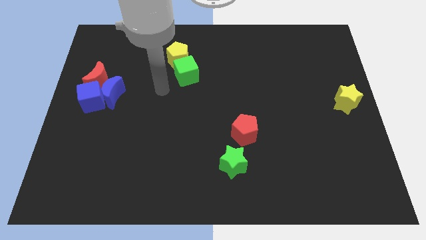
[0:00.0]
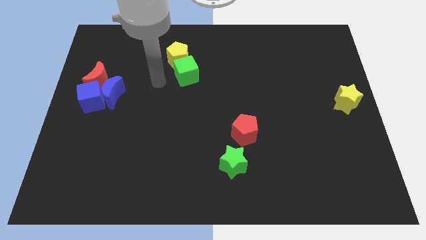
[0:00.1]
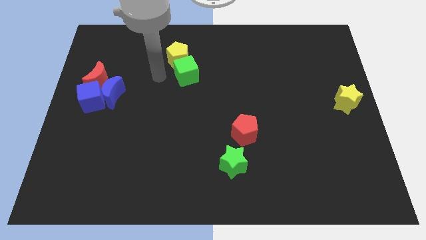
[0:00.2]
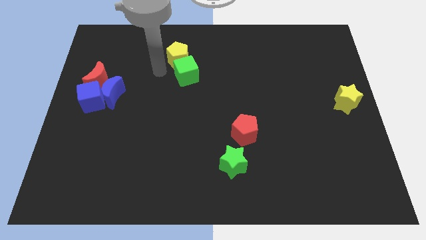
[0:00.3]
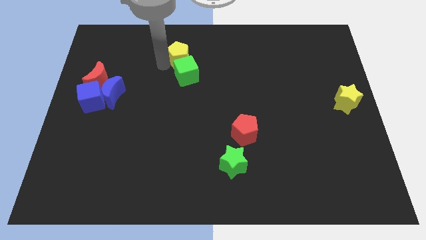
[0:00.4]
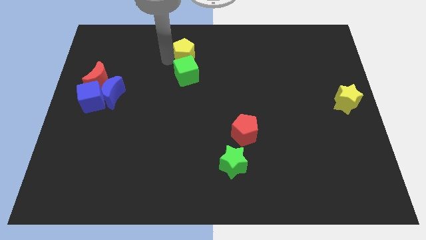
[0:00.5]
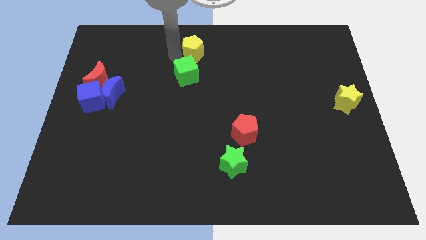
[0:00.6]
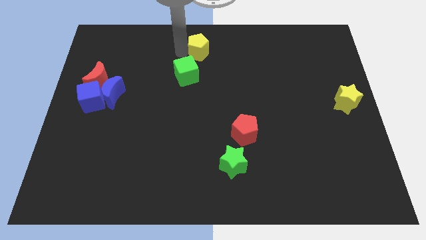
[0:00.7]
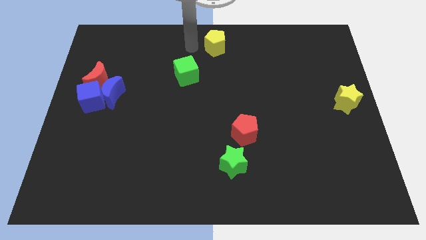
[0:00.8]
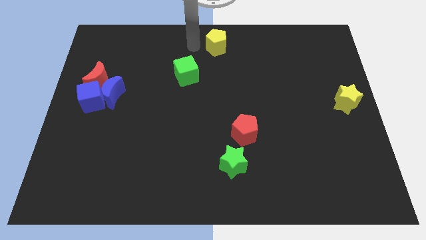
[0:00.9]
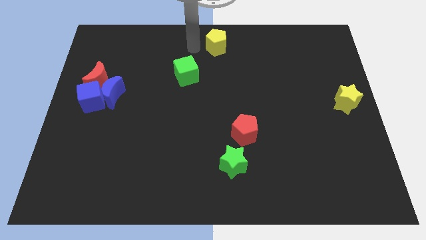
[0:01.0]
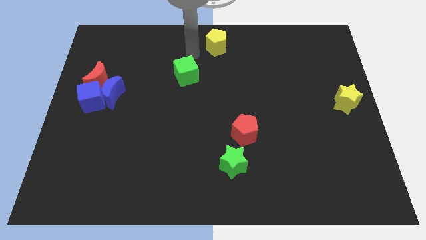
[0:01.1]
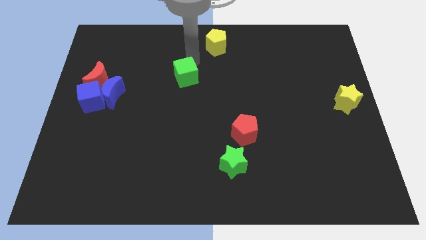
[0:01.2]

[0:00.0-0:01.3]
separate the yellow pentagon from green cube

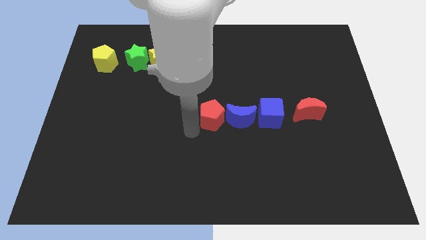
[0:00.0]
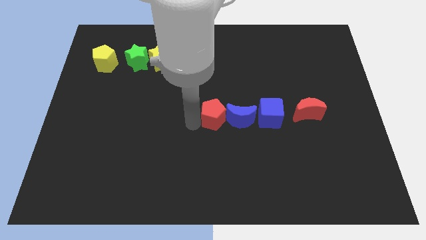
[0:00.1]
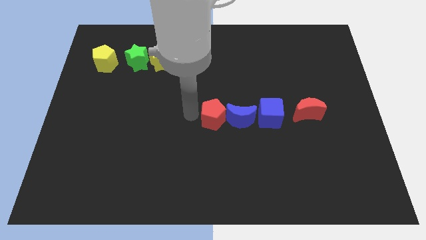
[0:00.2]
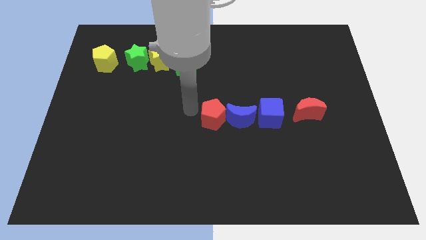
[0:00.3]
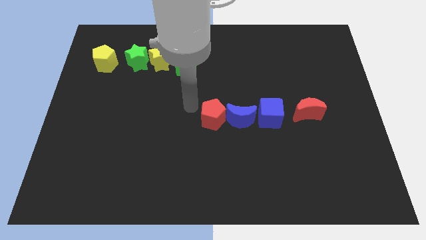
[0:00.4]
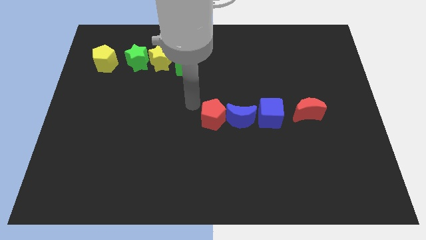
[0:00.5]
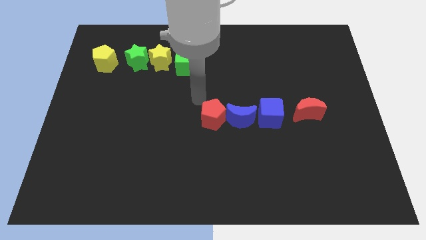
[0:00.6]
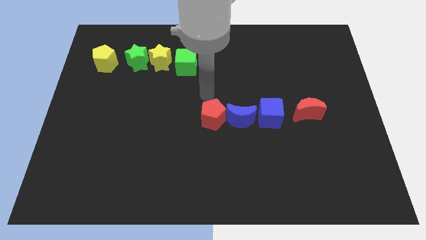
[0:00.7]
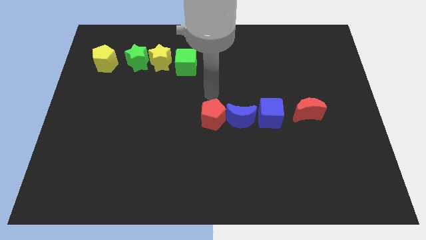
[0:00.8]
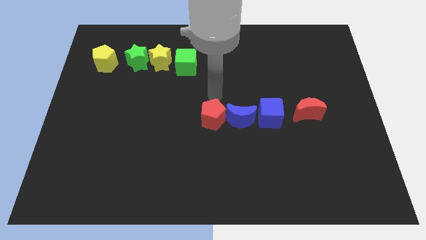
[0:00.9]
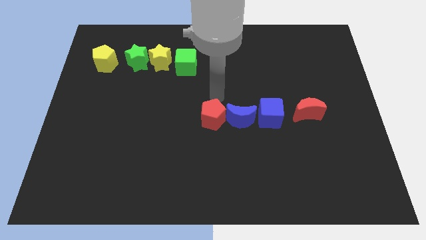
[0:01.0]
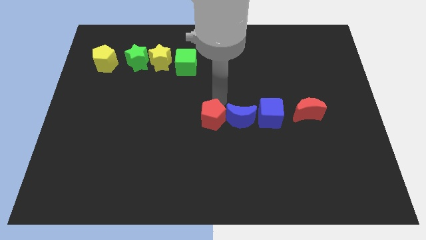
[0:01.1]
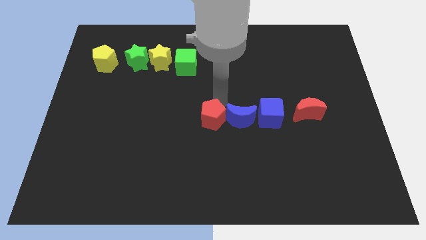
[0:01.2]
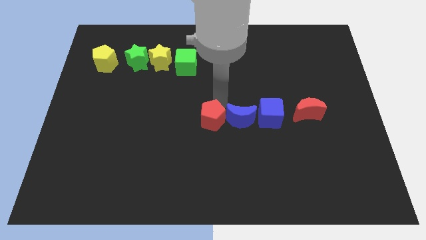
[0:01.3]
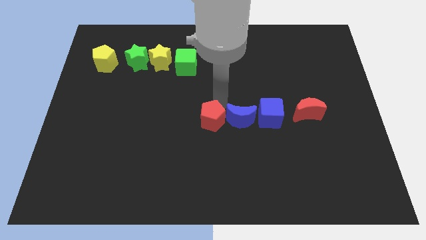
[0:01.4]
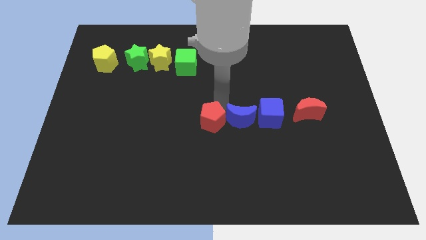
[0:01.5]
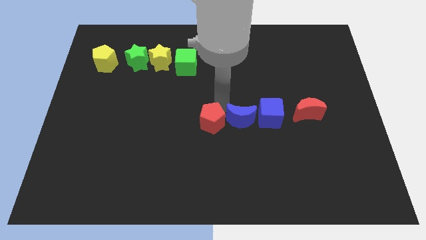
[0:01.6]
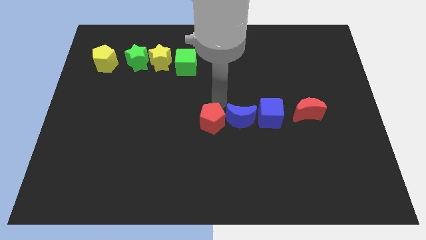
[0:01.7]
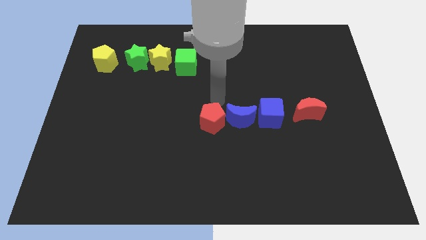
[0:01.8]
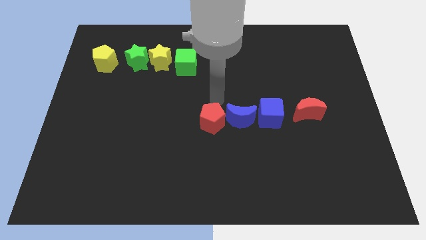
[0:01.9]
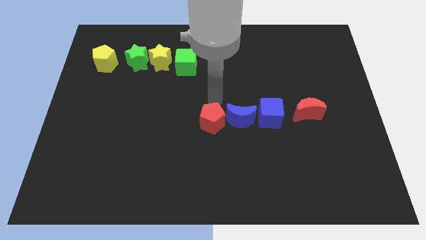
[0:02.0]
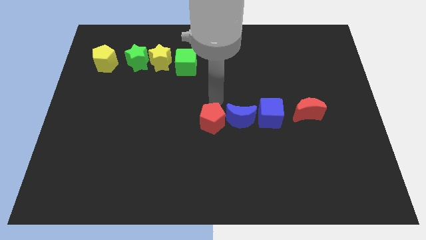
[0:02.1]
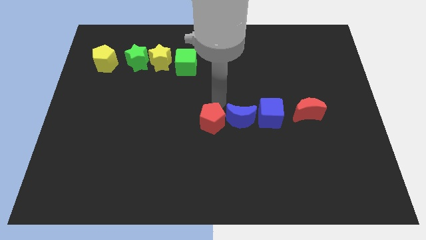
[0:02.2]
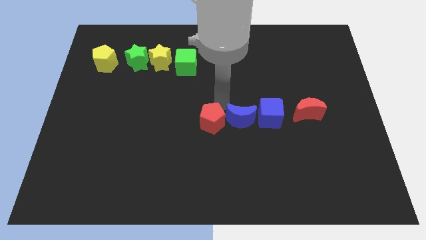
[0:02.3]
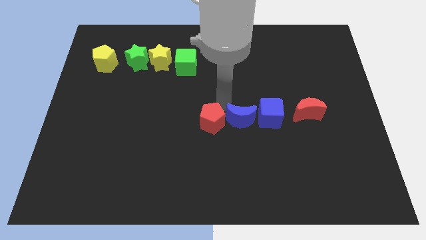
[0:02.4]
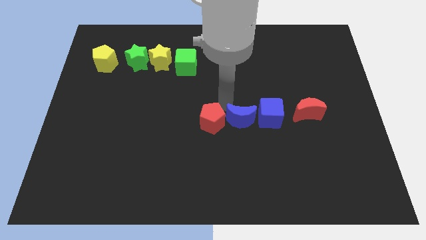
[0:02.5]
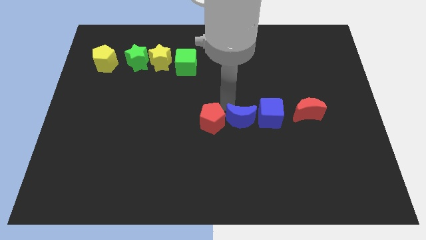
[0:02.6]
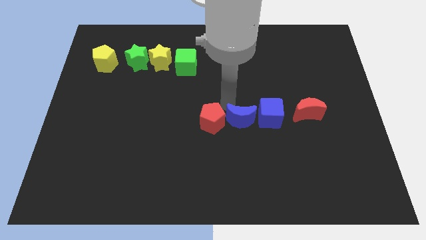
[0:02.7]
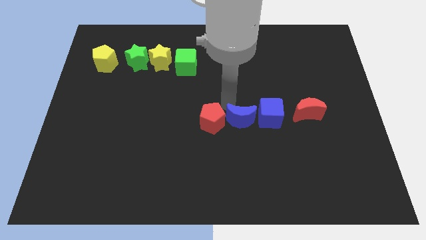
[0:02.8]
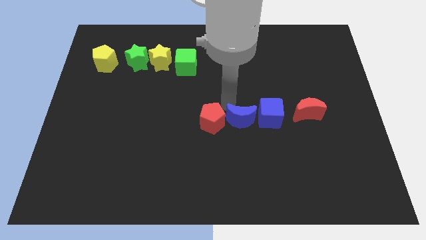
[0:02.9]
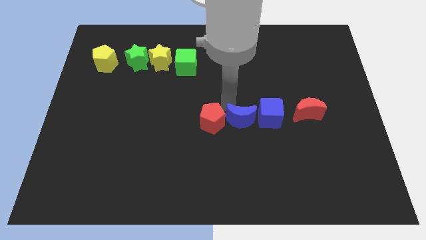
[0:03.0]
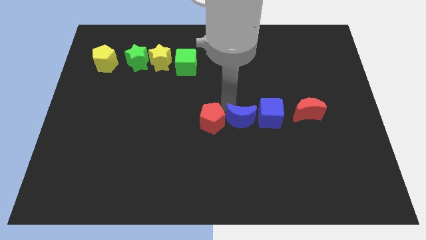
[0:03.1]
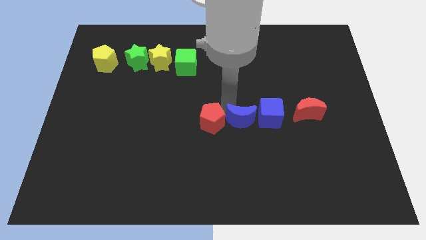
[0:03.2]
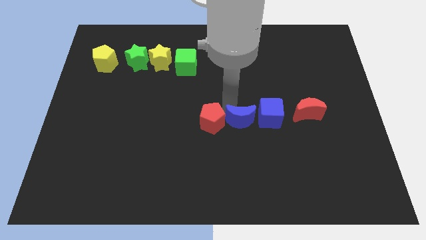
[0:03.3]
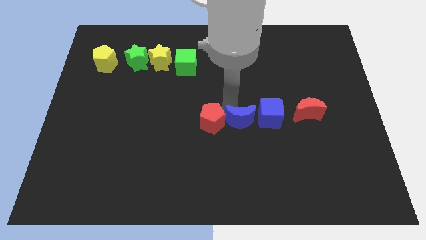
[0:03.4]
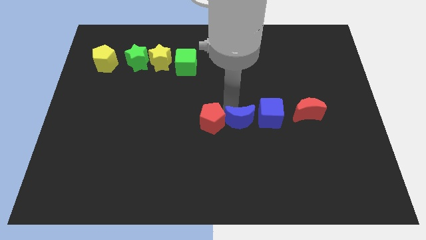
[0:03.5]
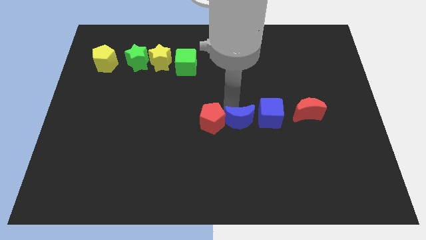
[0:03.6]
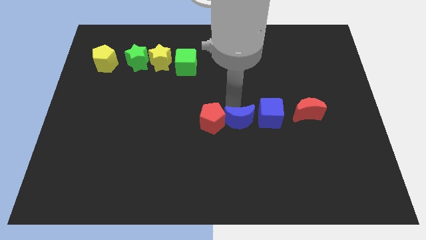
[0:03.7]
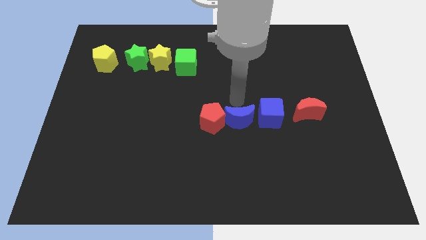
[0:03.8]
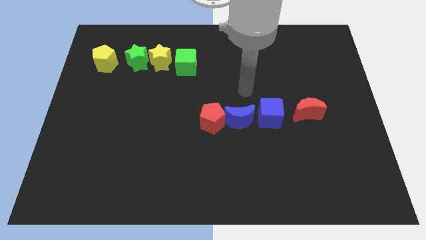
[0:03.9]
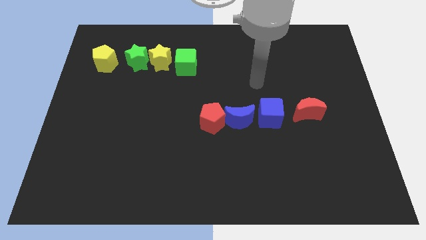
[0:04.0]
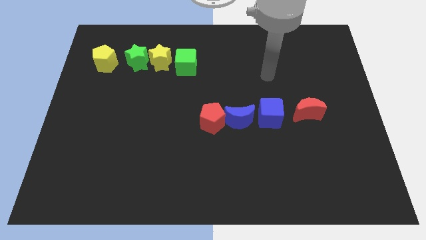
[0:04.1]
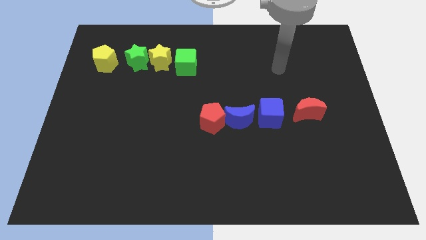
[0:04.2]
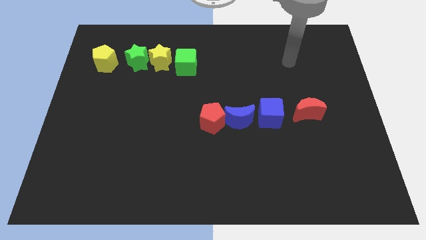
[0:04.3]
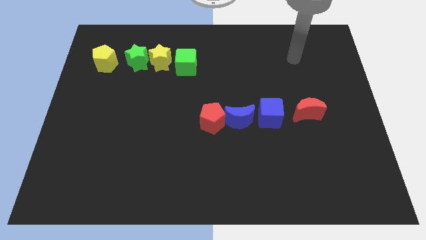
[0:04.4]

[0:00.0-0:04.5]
move the red pentagon blue moon downwards slightly

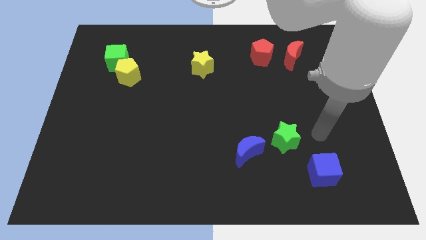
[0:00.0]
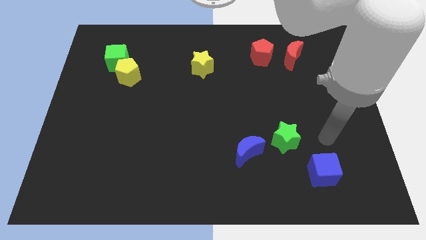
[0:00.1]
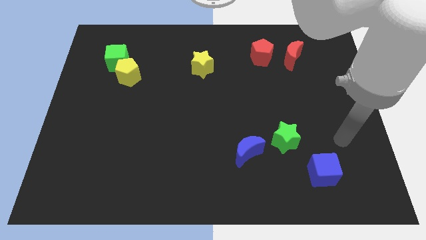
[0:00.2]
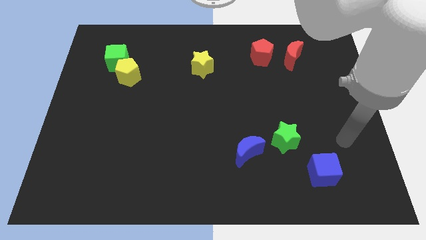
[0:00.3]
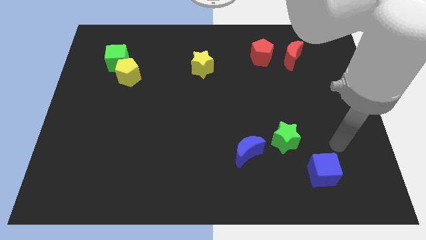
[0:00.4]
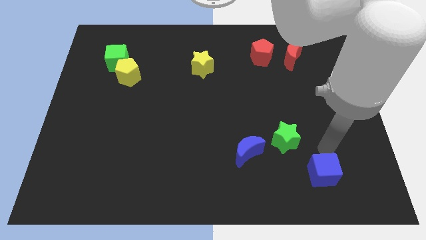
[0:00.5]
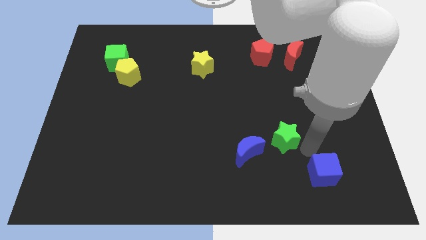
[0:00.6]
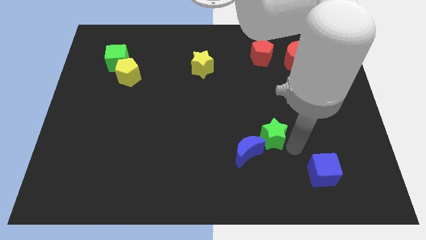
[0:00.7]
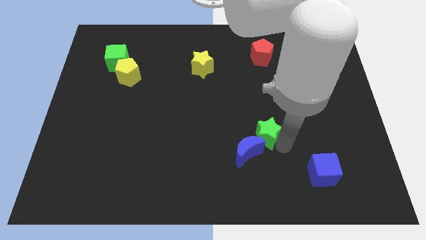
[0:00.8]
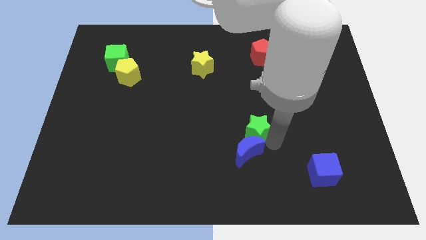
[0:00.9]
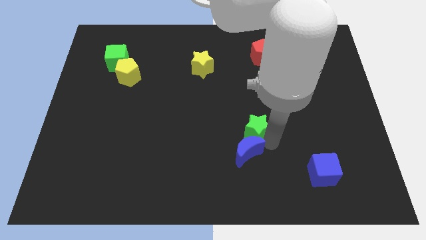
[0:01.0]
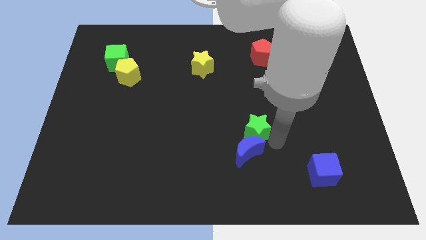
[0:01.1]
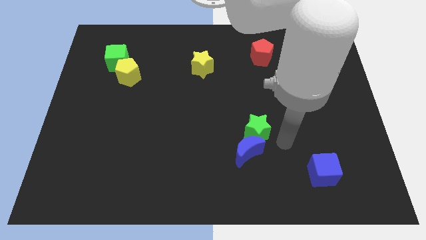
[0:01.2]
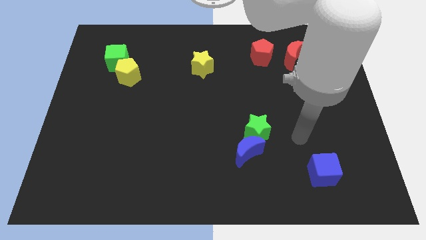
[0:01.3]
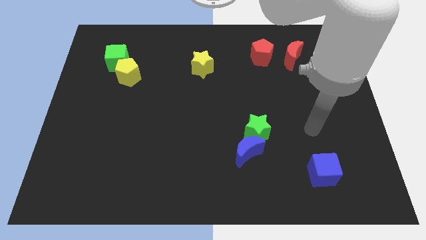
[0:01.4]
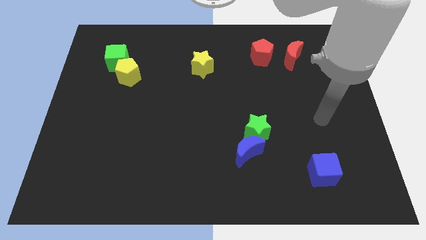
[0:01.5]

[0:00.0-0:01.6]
place the green star above the blue crescent

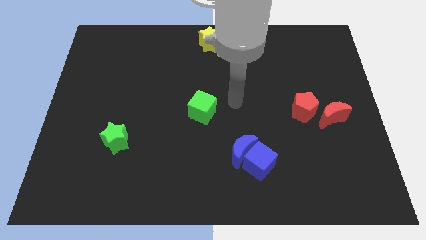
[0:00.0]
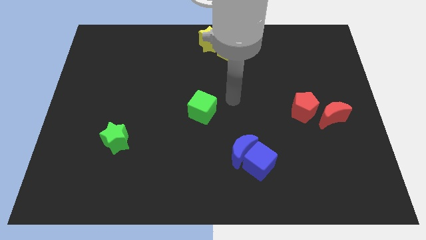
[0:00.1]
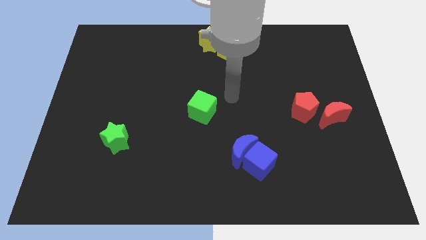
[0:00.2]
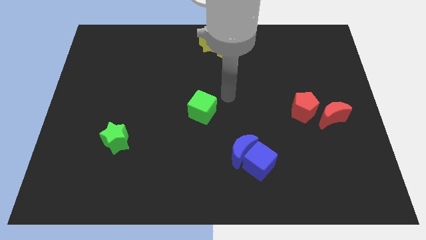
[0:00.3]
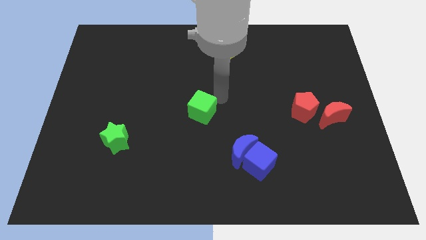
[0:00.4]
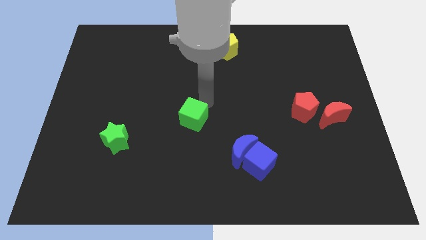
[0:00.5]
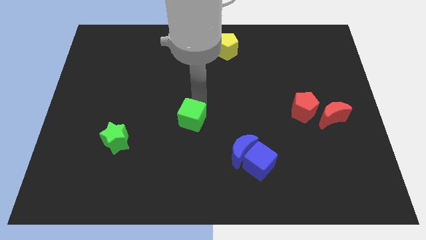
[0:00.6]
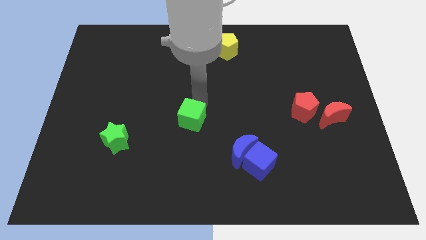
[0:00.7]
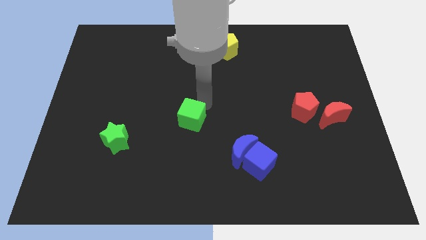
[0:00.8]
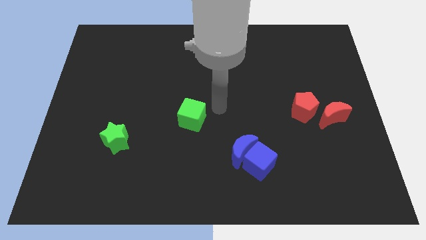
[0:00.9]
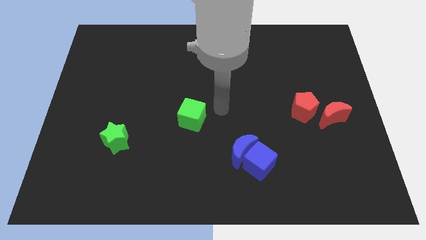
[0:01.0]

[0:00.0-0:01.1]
place the green cube diagonal to the blue moon

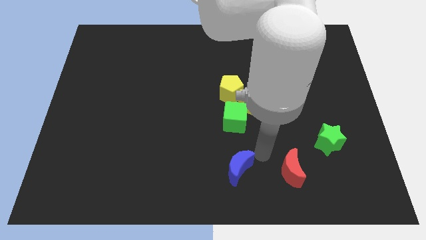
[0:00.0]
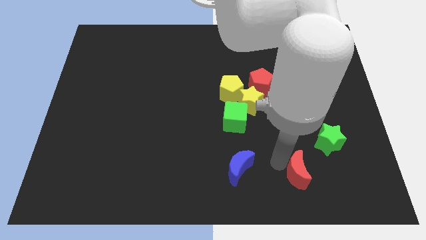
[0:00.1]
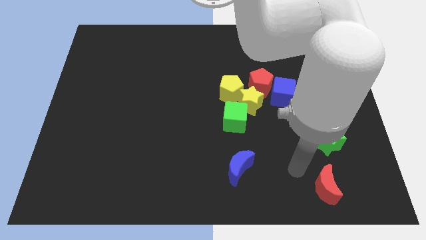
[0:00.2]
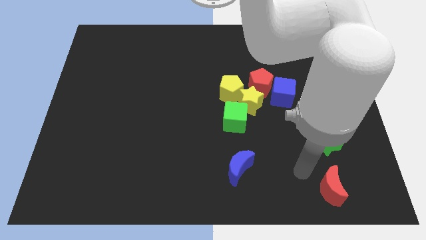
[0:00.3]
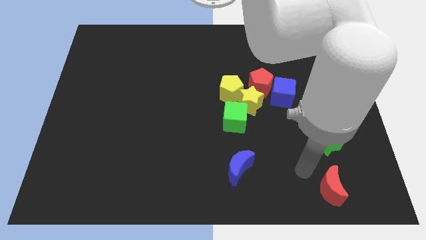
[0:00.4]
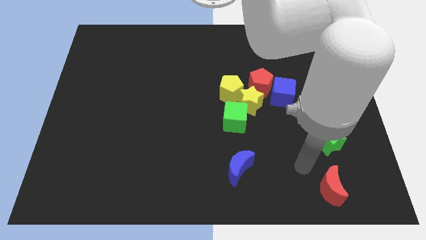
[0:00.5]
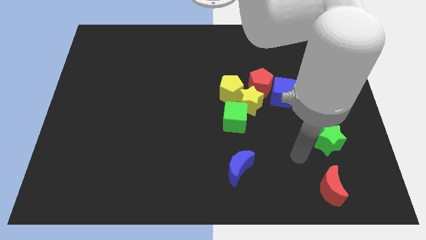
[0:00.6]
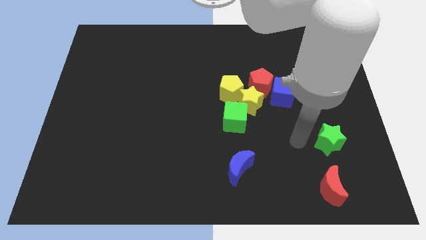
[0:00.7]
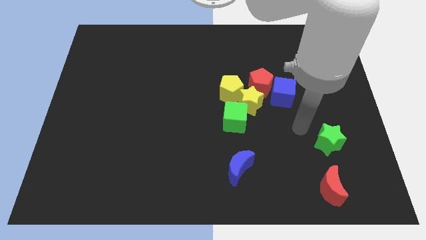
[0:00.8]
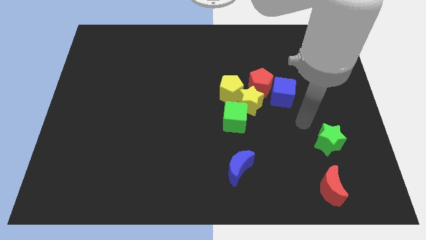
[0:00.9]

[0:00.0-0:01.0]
separate red moon from blue moon
